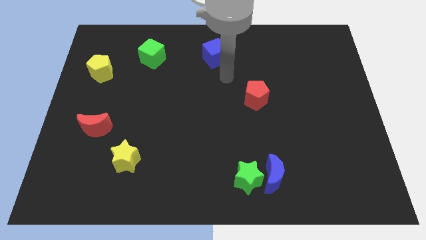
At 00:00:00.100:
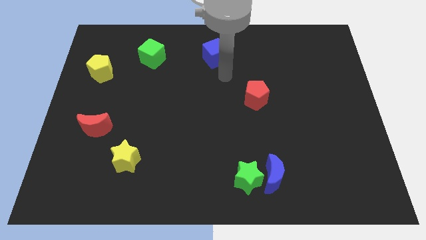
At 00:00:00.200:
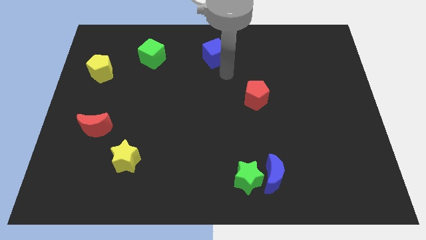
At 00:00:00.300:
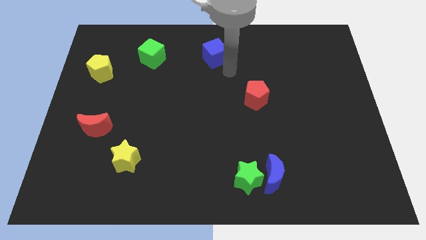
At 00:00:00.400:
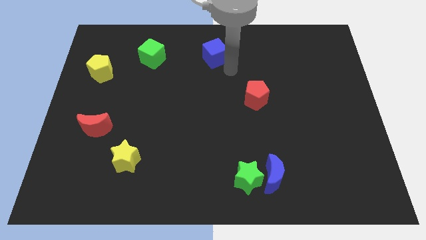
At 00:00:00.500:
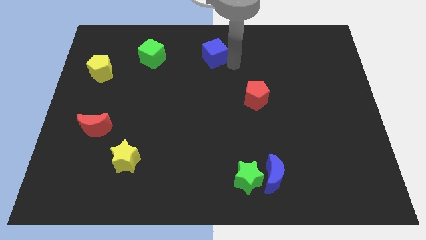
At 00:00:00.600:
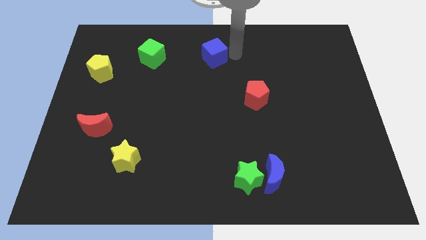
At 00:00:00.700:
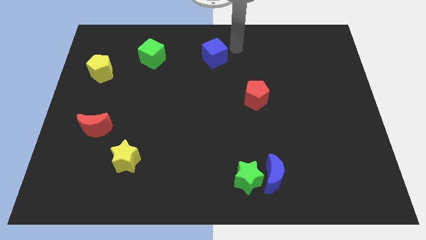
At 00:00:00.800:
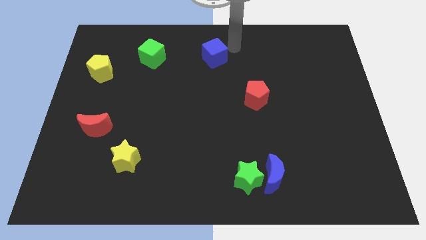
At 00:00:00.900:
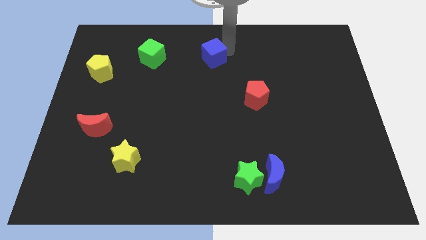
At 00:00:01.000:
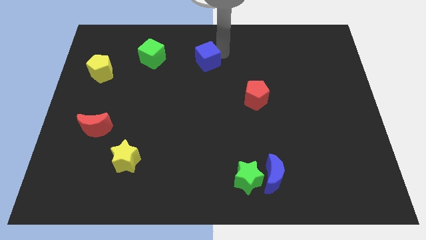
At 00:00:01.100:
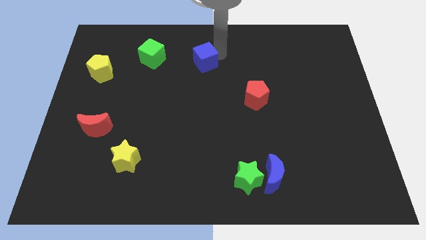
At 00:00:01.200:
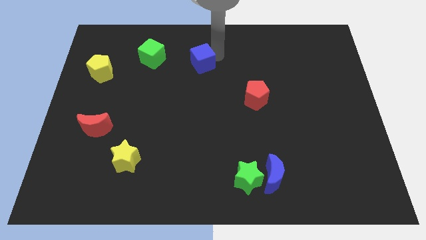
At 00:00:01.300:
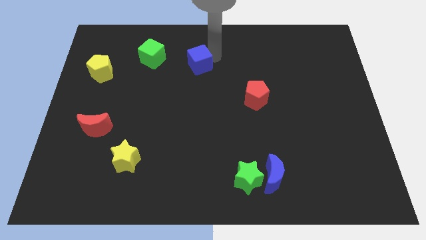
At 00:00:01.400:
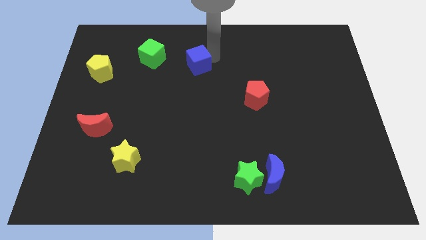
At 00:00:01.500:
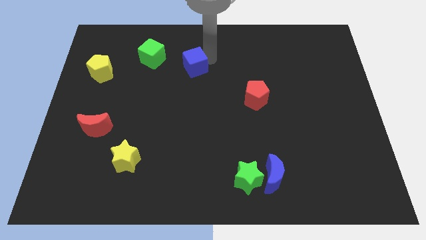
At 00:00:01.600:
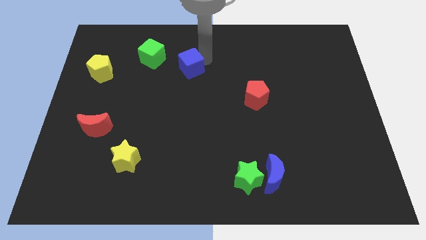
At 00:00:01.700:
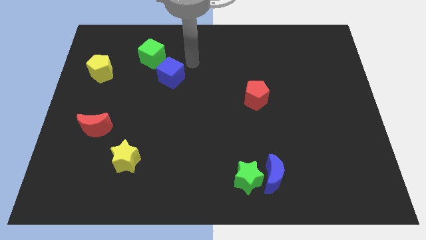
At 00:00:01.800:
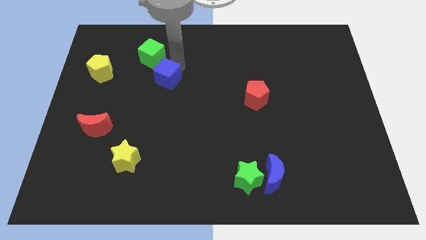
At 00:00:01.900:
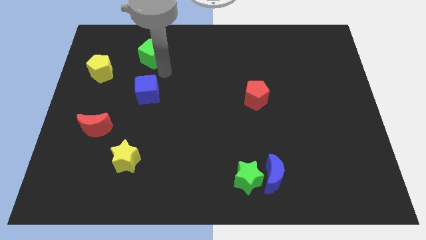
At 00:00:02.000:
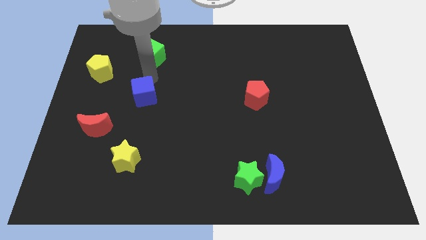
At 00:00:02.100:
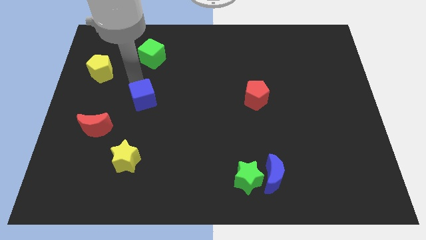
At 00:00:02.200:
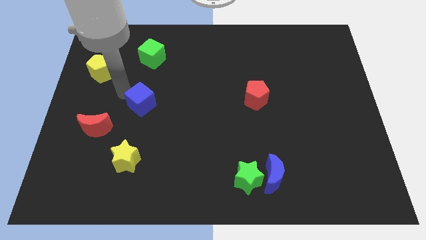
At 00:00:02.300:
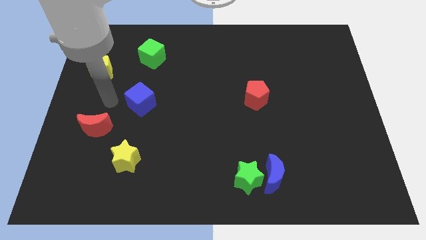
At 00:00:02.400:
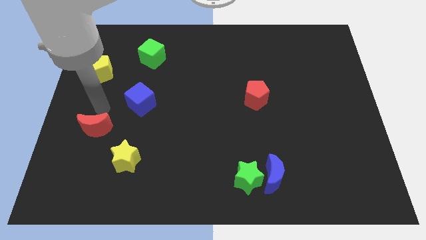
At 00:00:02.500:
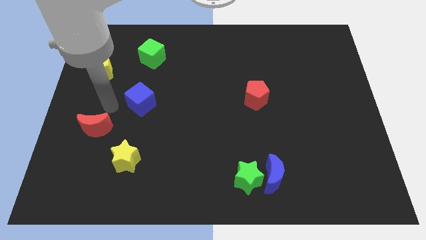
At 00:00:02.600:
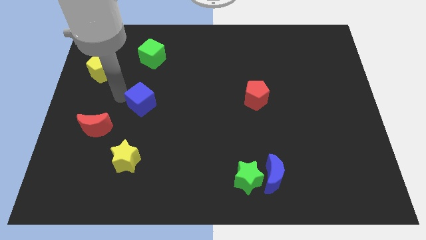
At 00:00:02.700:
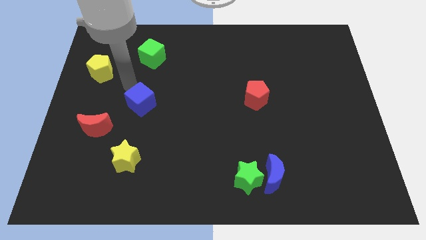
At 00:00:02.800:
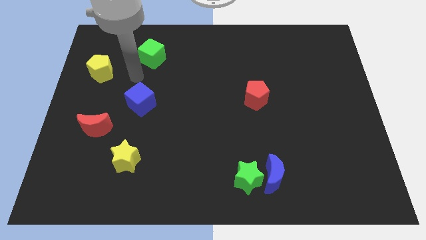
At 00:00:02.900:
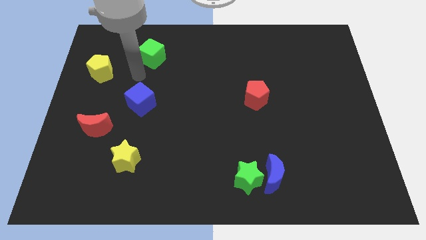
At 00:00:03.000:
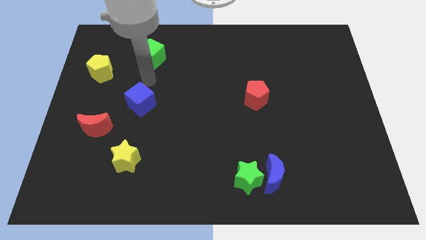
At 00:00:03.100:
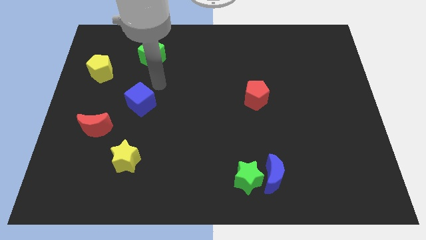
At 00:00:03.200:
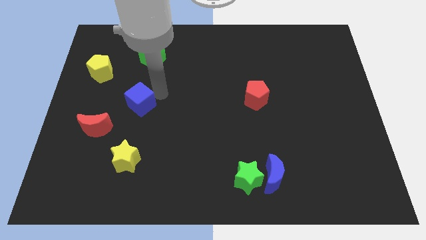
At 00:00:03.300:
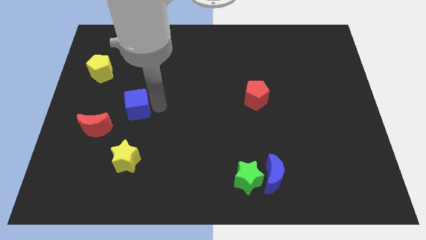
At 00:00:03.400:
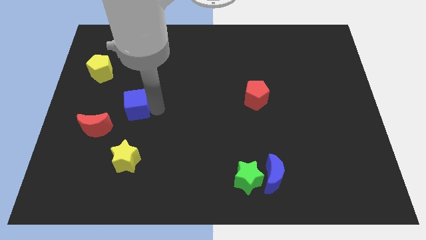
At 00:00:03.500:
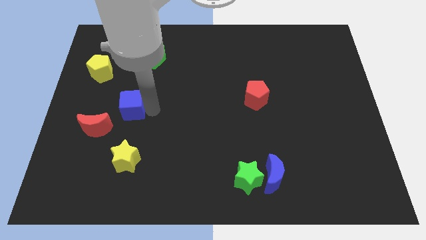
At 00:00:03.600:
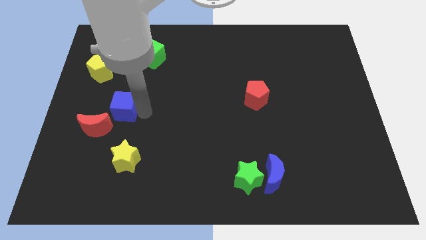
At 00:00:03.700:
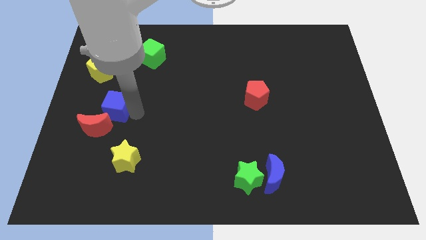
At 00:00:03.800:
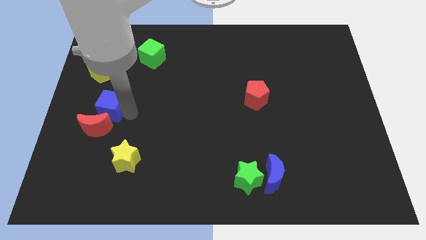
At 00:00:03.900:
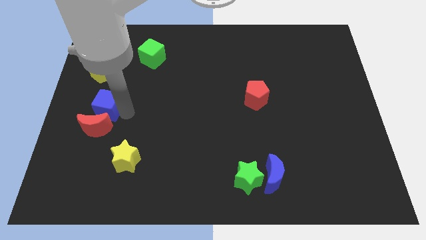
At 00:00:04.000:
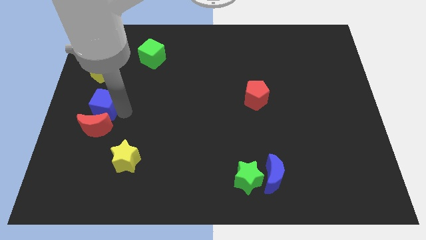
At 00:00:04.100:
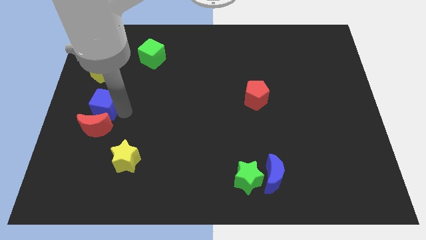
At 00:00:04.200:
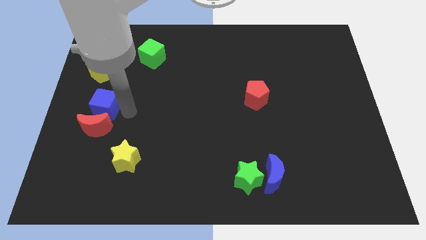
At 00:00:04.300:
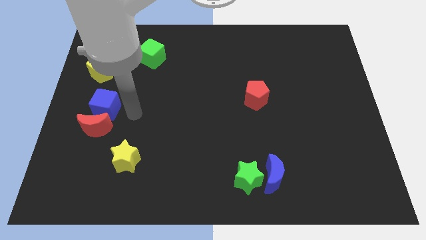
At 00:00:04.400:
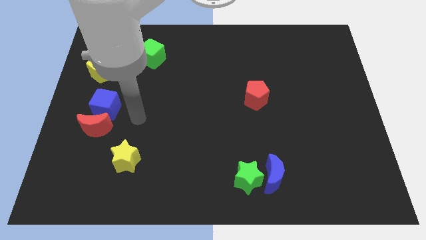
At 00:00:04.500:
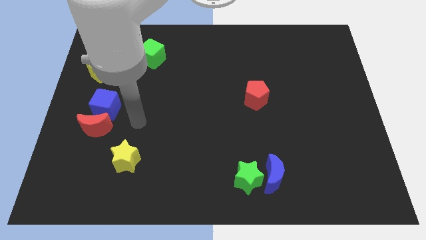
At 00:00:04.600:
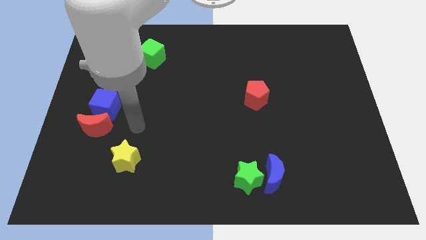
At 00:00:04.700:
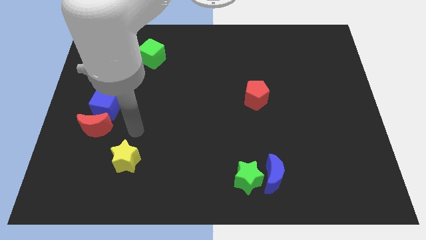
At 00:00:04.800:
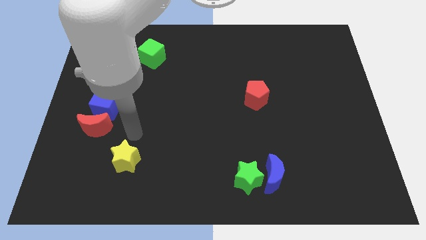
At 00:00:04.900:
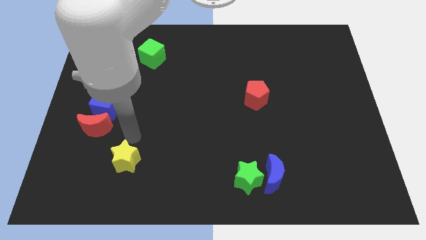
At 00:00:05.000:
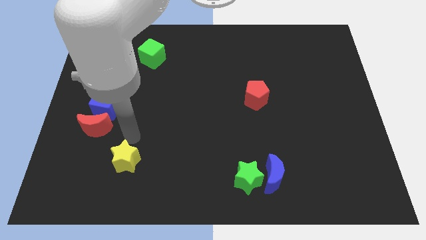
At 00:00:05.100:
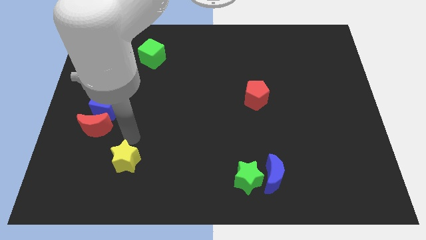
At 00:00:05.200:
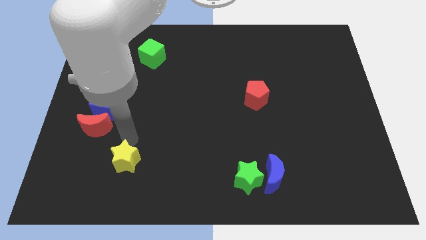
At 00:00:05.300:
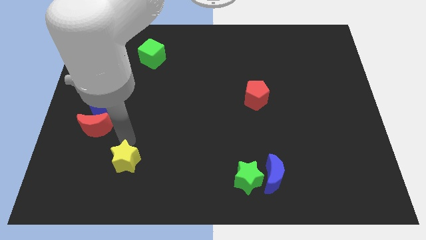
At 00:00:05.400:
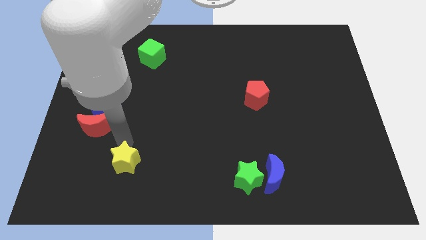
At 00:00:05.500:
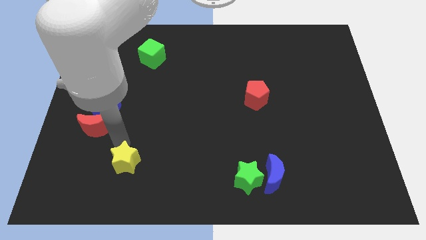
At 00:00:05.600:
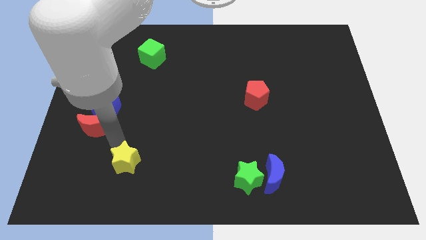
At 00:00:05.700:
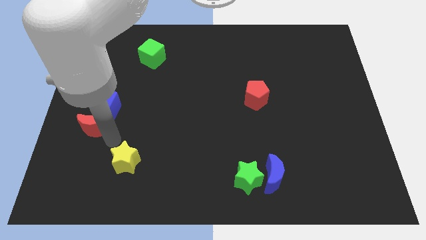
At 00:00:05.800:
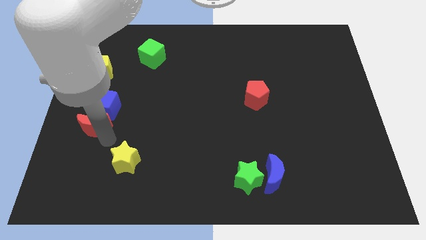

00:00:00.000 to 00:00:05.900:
put the blue cube at the top right side of the red moon

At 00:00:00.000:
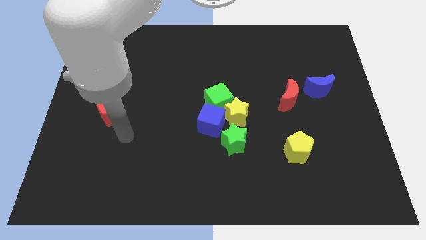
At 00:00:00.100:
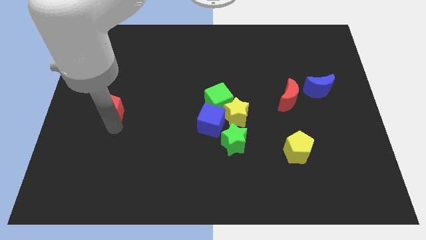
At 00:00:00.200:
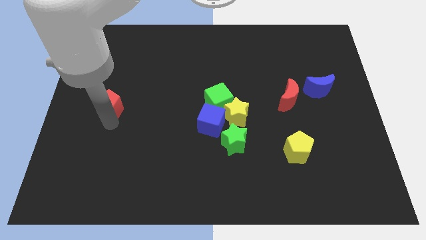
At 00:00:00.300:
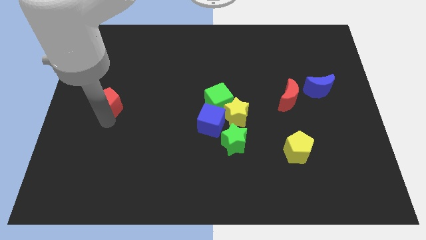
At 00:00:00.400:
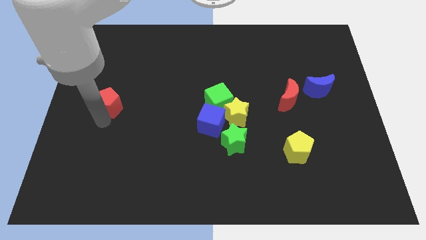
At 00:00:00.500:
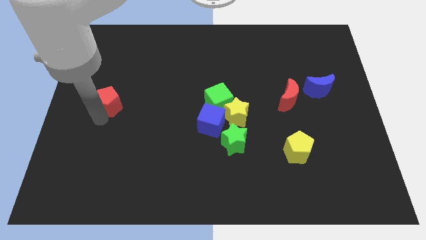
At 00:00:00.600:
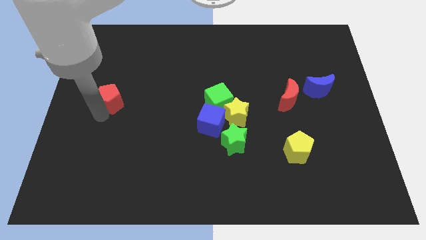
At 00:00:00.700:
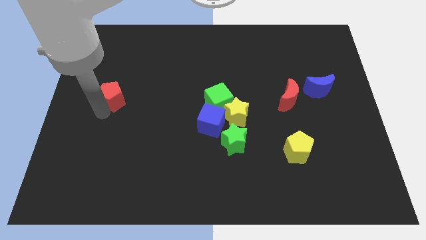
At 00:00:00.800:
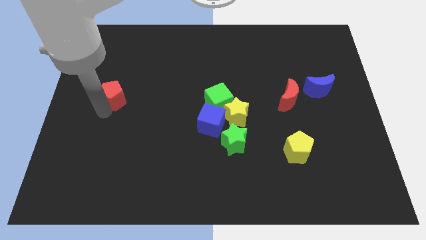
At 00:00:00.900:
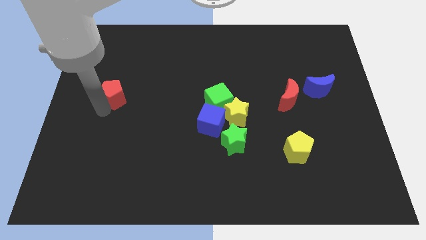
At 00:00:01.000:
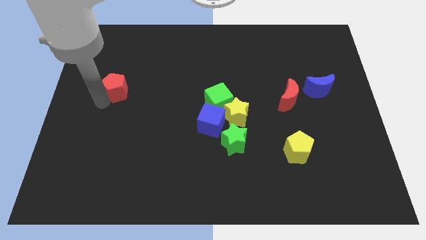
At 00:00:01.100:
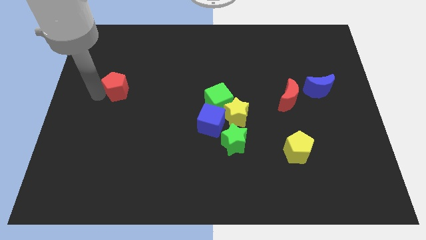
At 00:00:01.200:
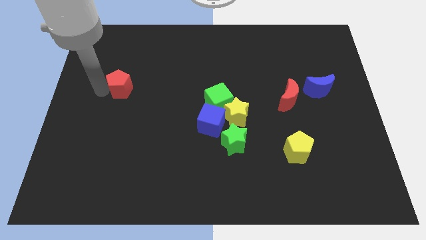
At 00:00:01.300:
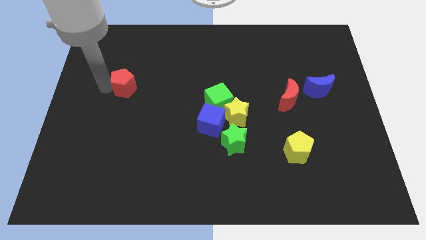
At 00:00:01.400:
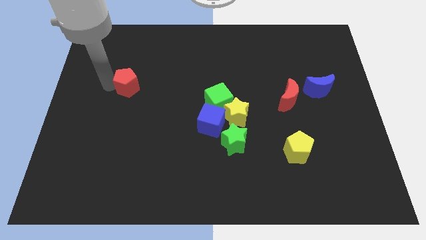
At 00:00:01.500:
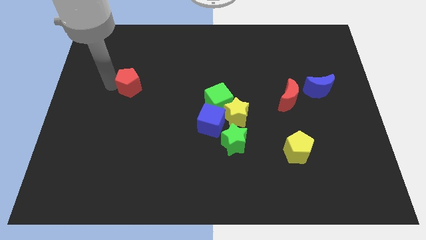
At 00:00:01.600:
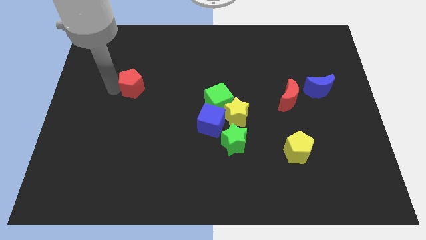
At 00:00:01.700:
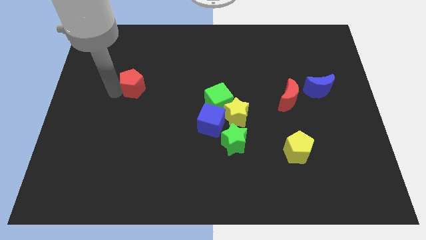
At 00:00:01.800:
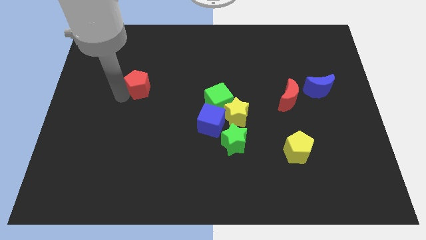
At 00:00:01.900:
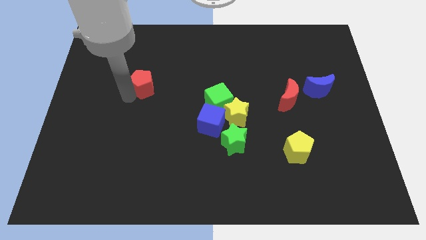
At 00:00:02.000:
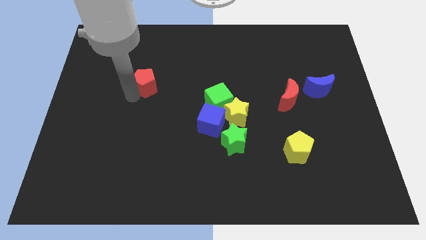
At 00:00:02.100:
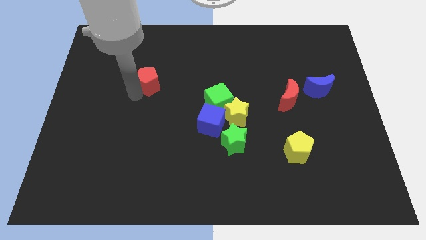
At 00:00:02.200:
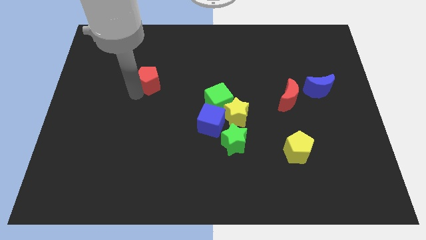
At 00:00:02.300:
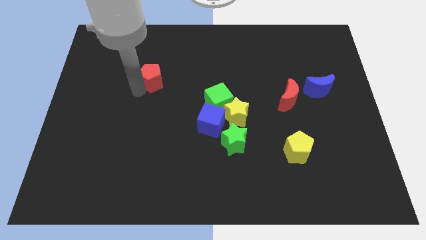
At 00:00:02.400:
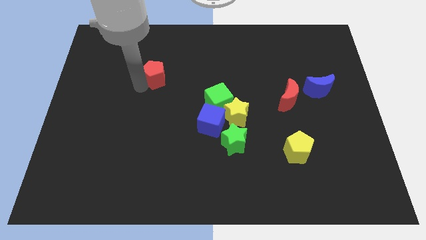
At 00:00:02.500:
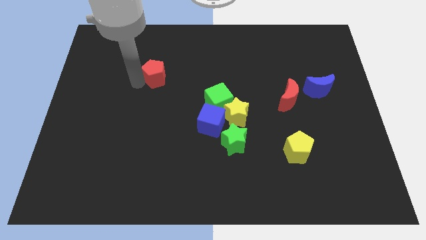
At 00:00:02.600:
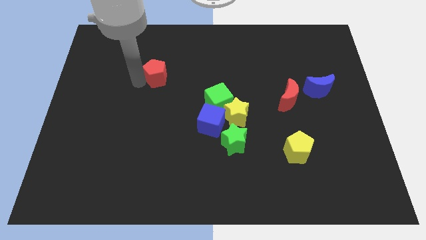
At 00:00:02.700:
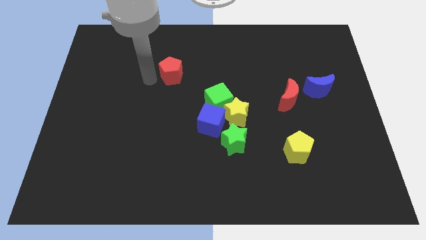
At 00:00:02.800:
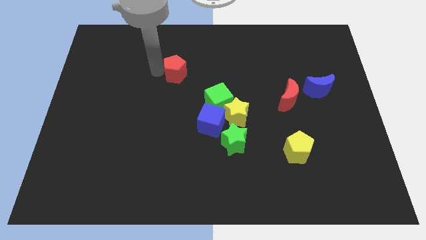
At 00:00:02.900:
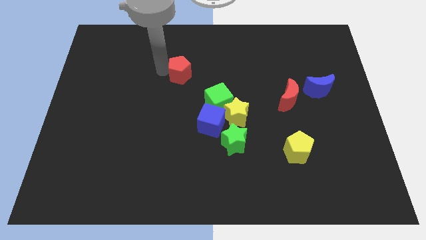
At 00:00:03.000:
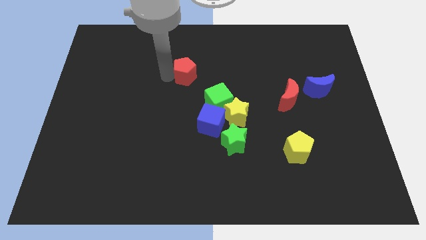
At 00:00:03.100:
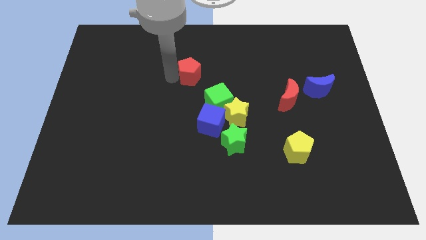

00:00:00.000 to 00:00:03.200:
slide red pentagon diagonally top left to the blue cube
